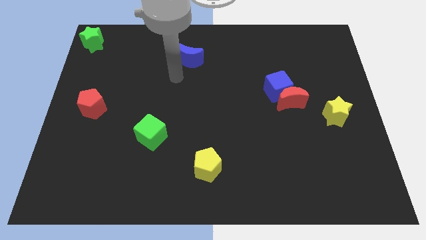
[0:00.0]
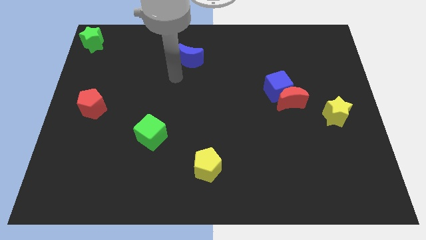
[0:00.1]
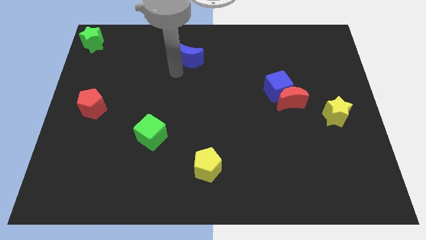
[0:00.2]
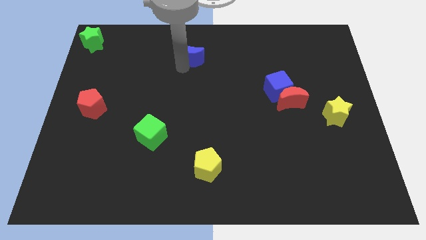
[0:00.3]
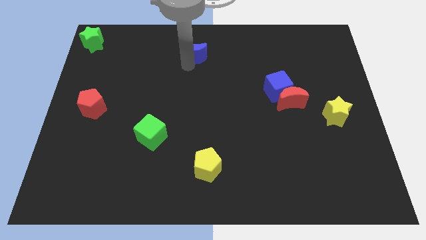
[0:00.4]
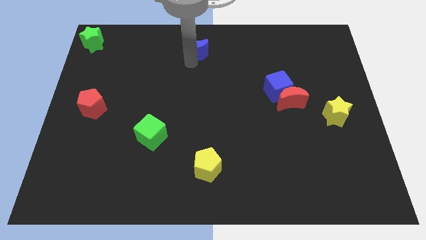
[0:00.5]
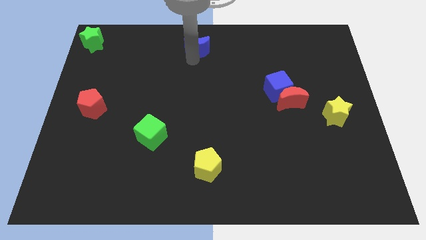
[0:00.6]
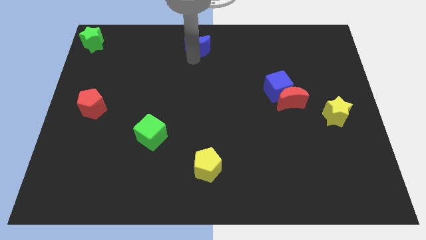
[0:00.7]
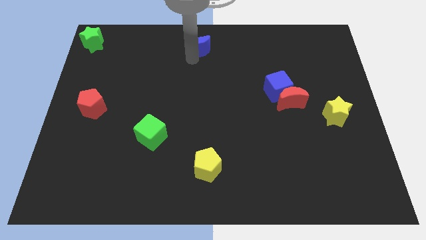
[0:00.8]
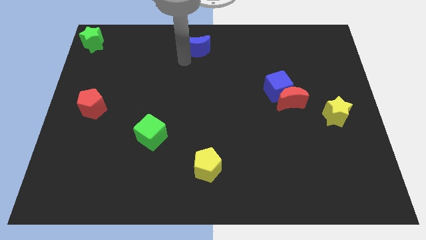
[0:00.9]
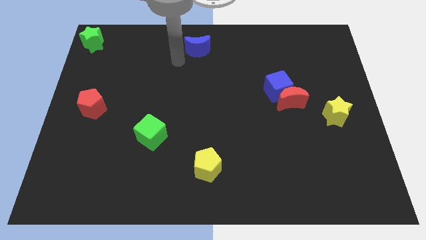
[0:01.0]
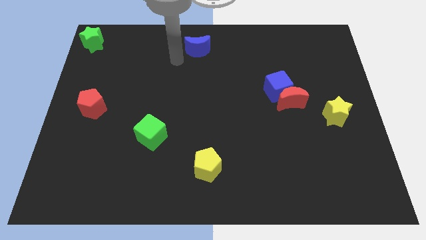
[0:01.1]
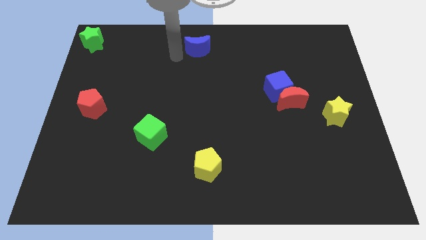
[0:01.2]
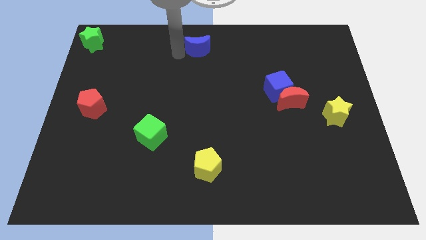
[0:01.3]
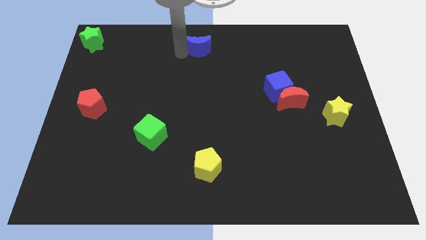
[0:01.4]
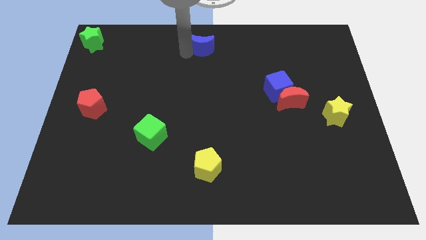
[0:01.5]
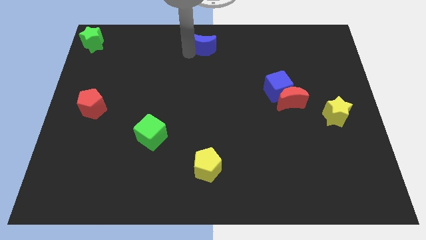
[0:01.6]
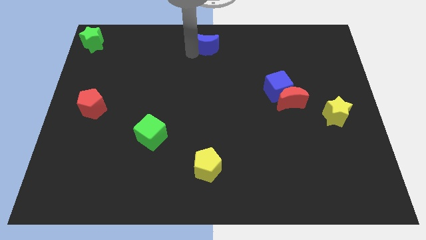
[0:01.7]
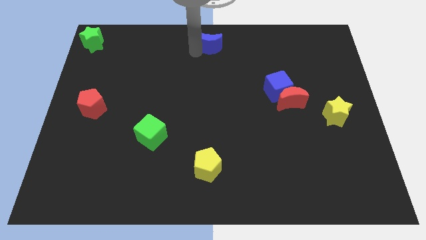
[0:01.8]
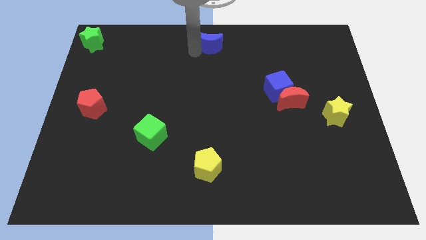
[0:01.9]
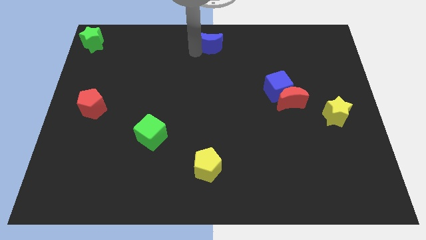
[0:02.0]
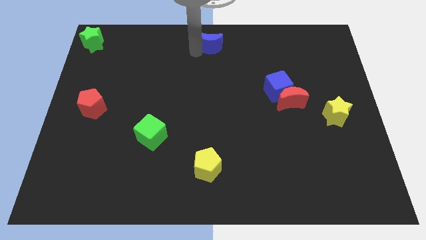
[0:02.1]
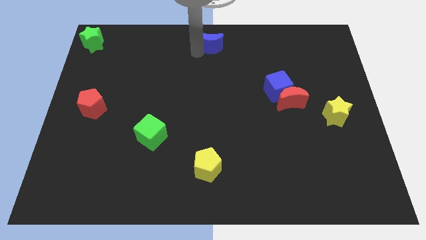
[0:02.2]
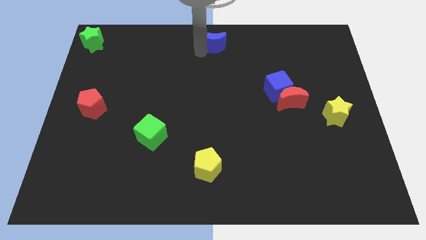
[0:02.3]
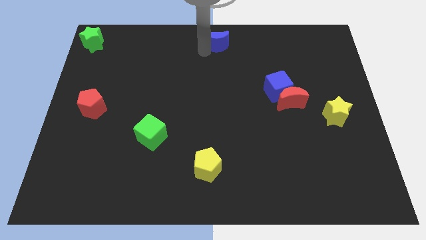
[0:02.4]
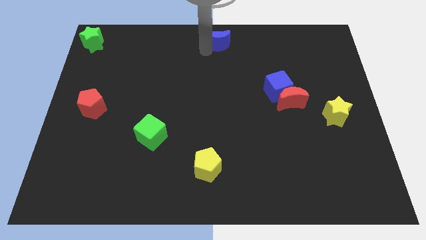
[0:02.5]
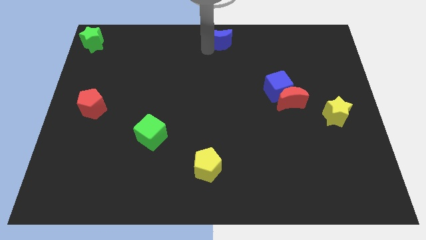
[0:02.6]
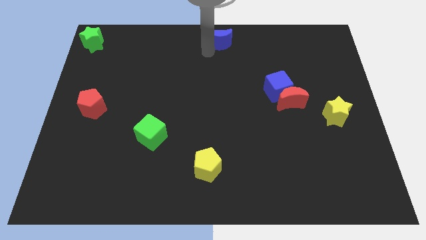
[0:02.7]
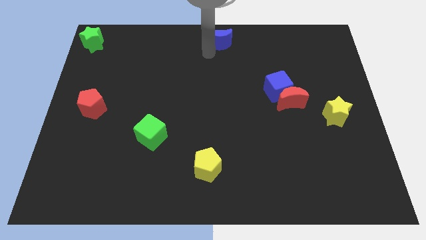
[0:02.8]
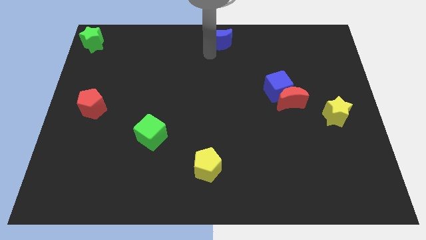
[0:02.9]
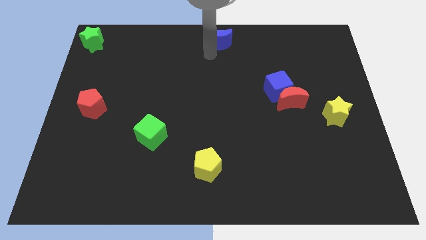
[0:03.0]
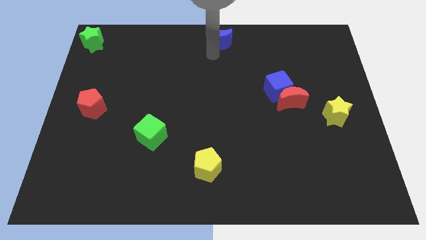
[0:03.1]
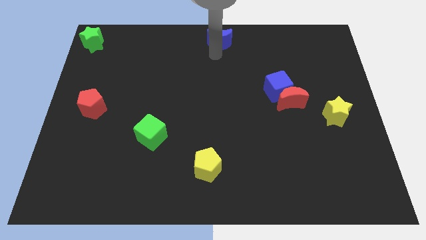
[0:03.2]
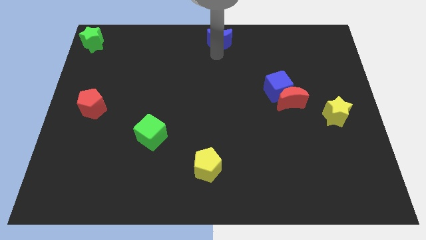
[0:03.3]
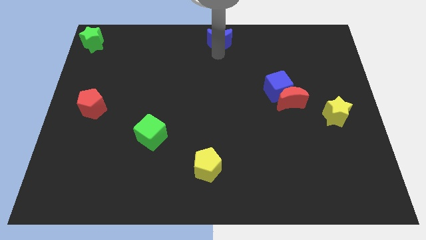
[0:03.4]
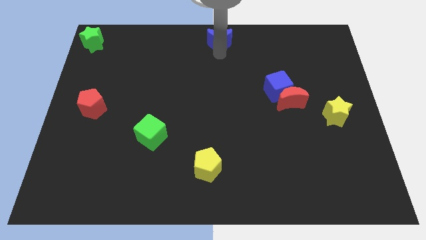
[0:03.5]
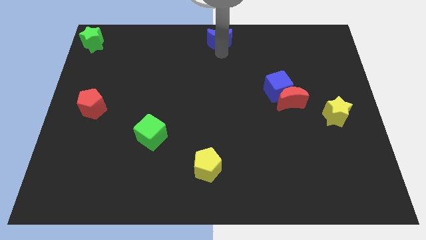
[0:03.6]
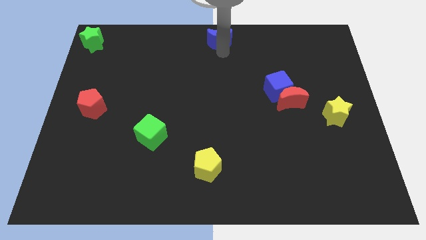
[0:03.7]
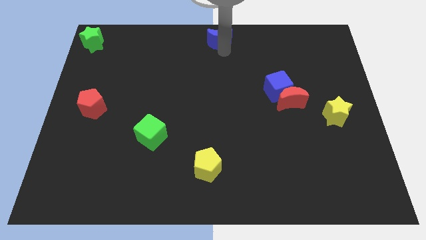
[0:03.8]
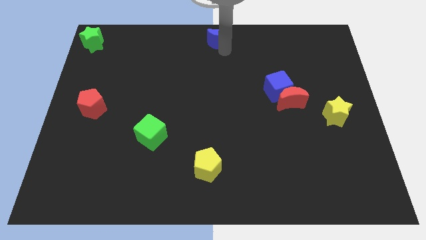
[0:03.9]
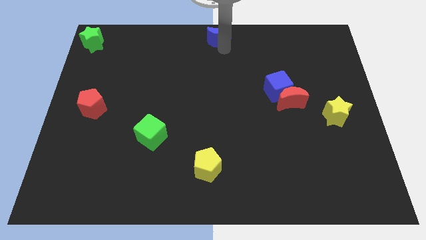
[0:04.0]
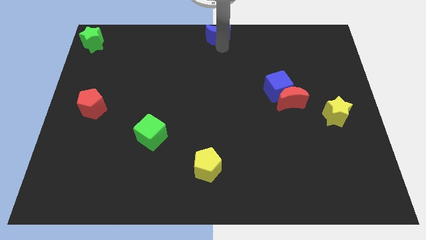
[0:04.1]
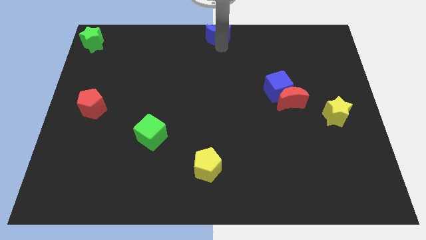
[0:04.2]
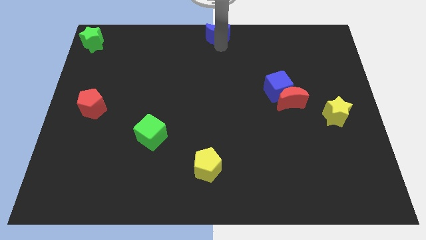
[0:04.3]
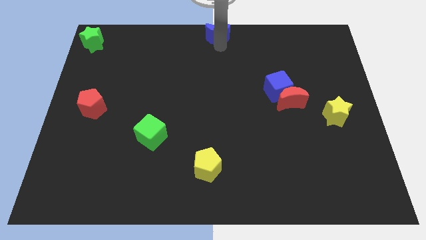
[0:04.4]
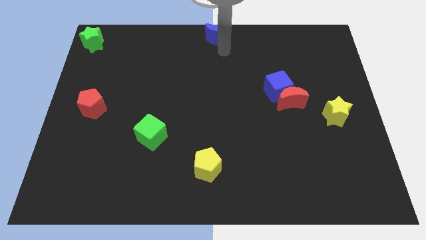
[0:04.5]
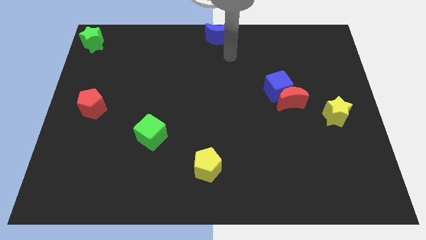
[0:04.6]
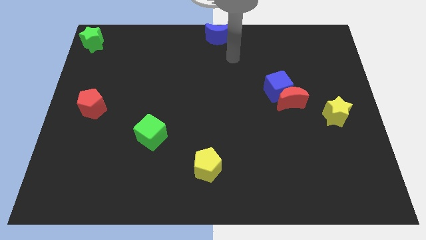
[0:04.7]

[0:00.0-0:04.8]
move the blue moon to the top center of the board

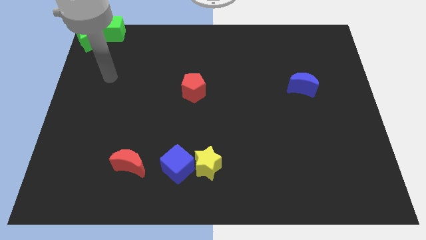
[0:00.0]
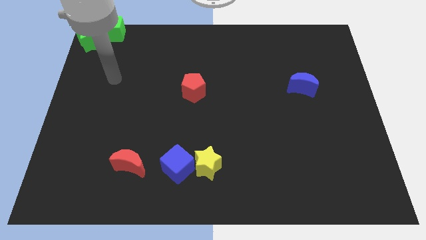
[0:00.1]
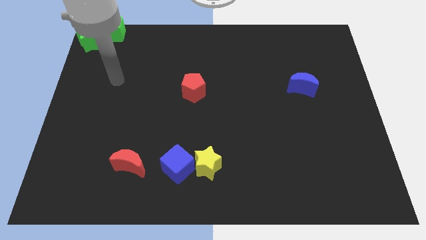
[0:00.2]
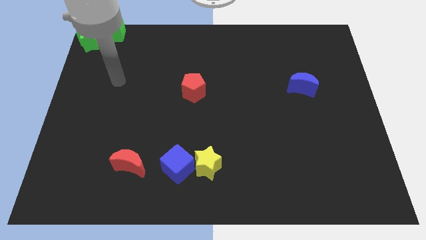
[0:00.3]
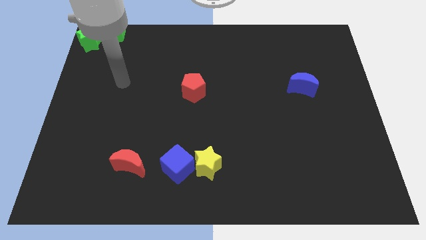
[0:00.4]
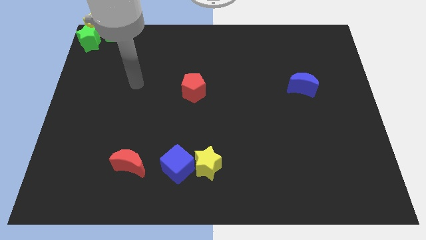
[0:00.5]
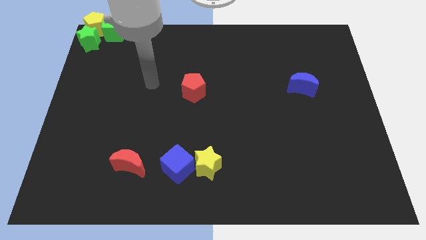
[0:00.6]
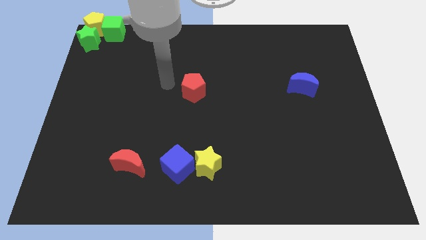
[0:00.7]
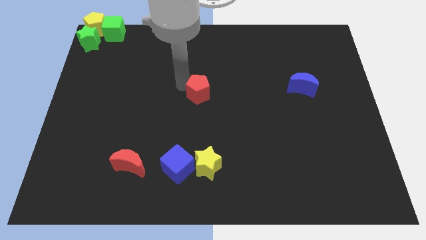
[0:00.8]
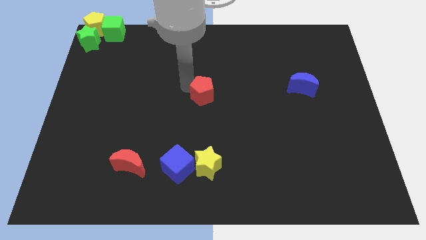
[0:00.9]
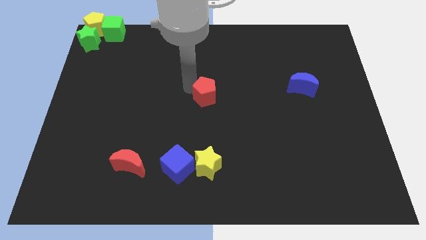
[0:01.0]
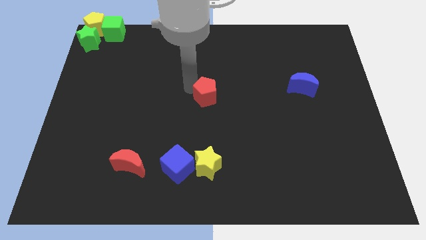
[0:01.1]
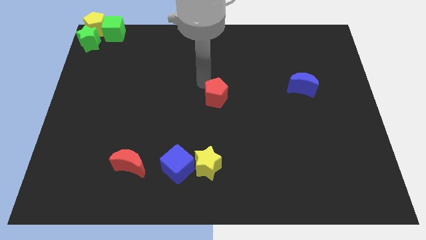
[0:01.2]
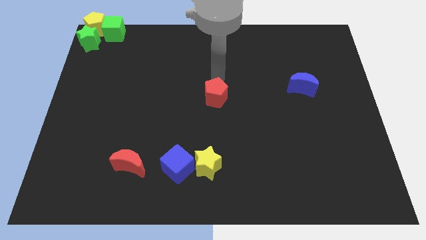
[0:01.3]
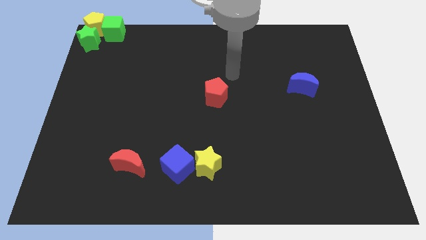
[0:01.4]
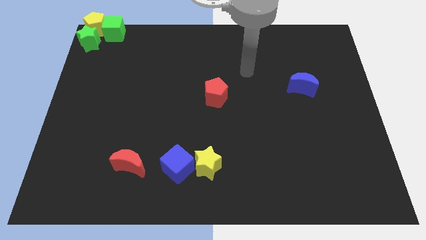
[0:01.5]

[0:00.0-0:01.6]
push the red pentagon above the yellow star

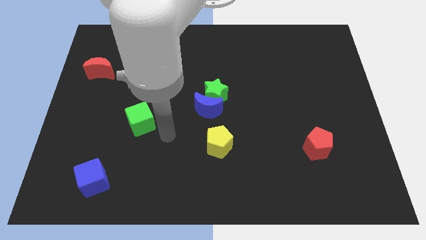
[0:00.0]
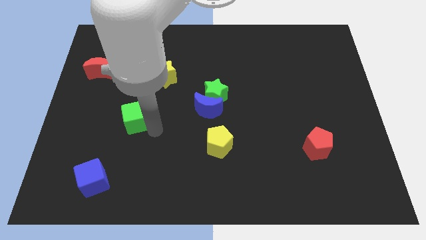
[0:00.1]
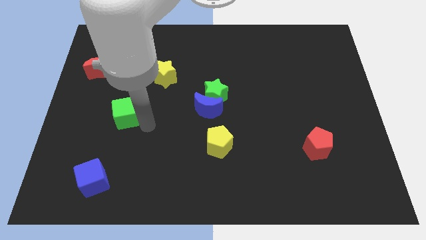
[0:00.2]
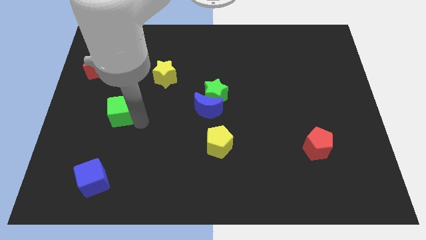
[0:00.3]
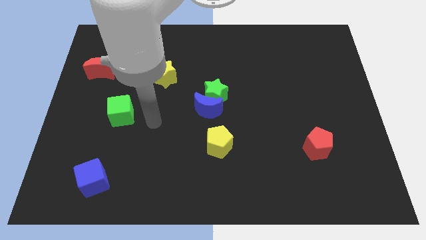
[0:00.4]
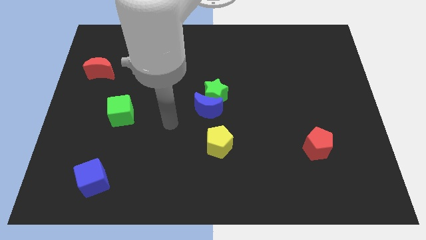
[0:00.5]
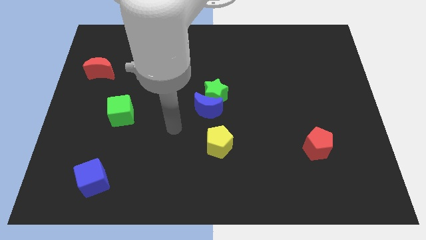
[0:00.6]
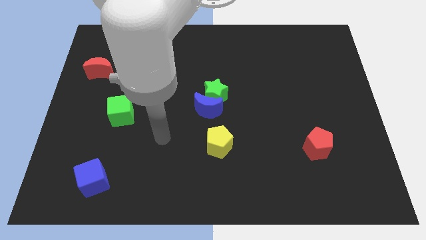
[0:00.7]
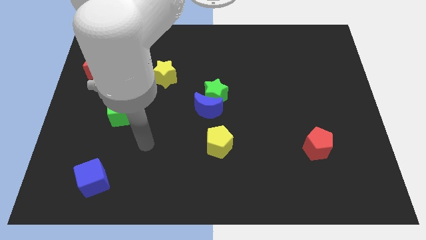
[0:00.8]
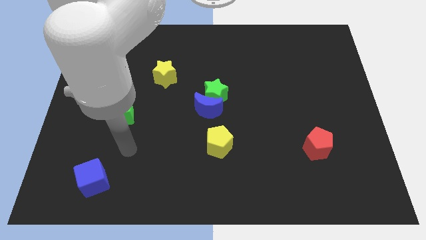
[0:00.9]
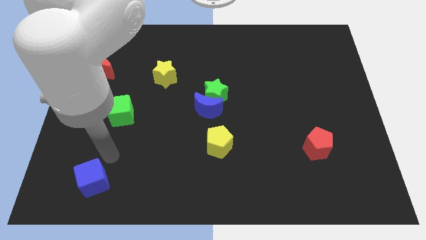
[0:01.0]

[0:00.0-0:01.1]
slide green cube above blue cube

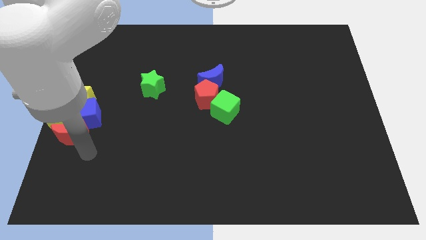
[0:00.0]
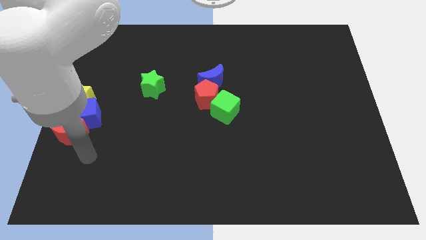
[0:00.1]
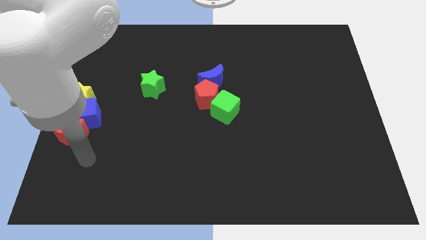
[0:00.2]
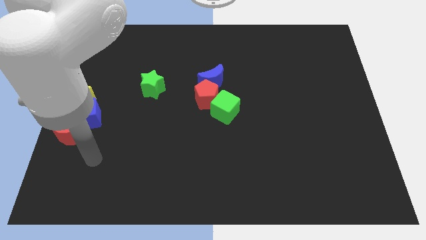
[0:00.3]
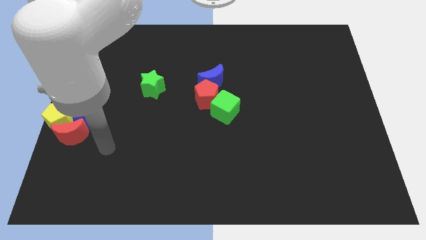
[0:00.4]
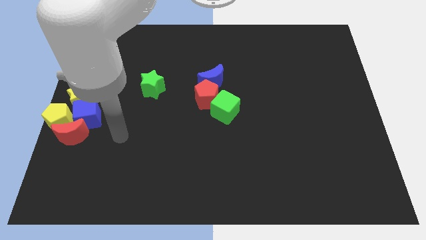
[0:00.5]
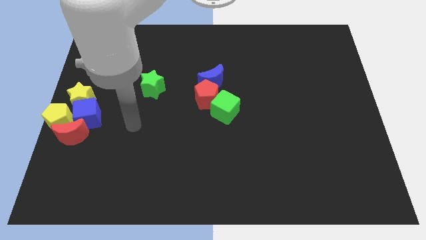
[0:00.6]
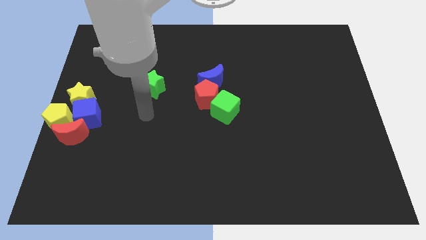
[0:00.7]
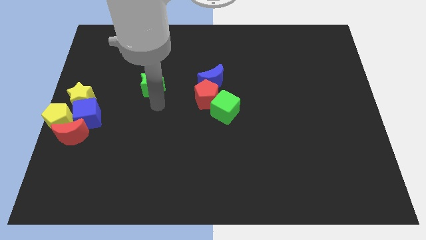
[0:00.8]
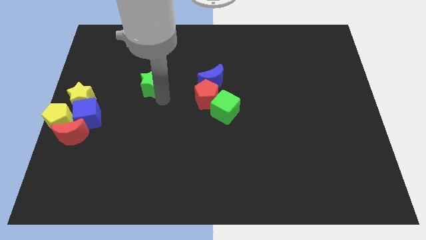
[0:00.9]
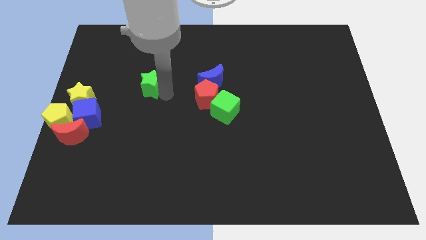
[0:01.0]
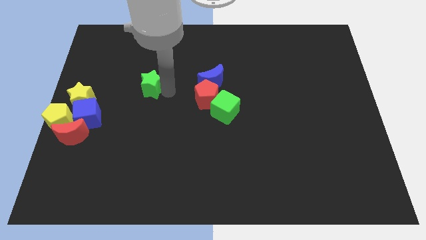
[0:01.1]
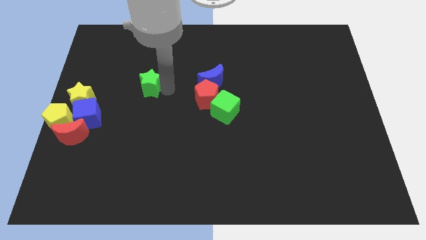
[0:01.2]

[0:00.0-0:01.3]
move the arm at the right side of the green star
